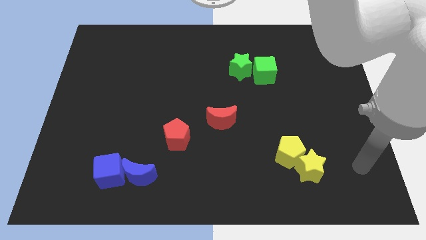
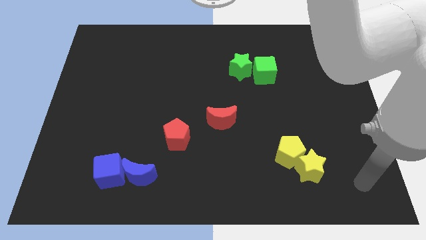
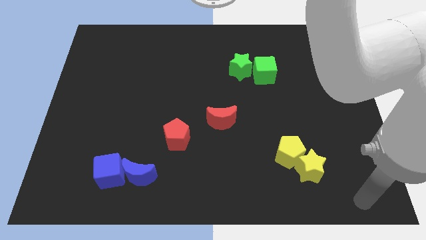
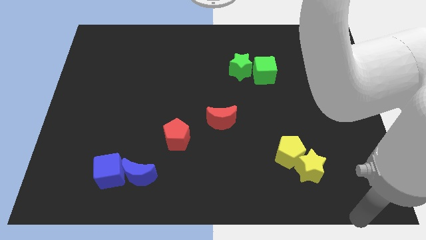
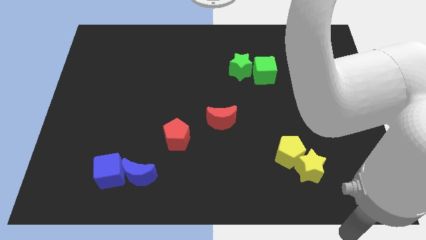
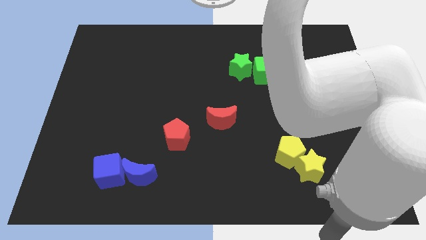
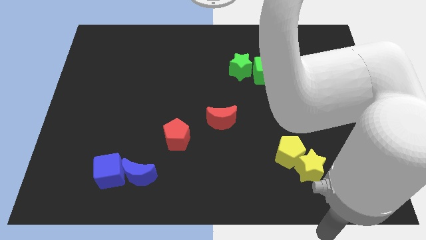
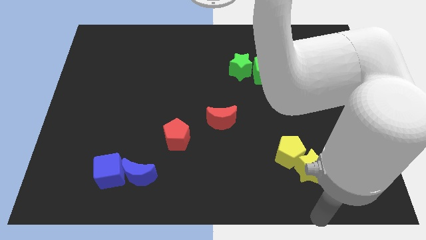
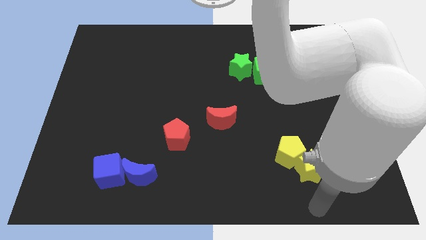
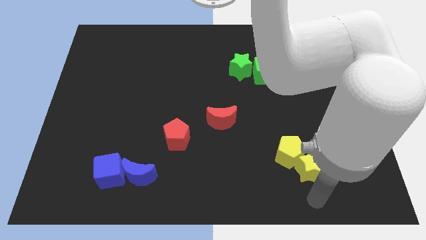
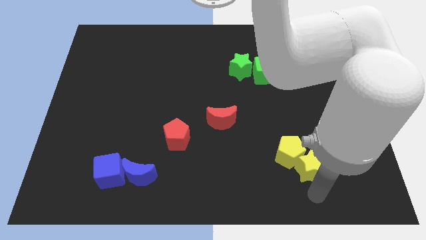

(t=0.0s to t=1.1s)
place arm below yellow star

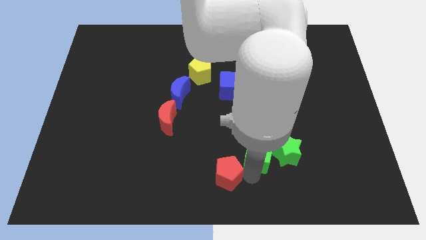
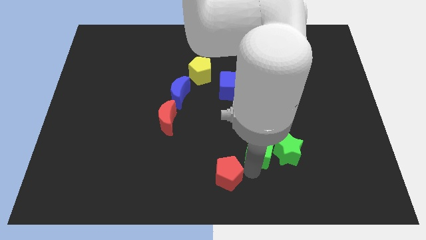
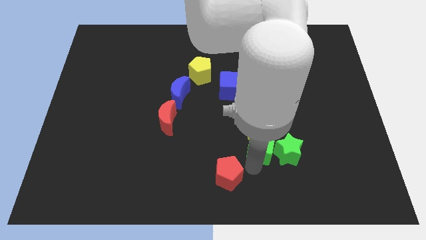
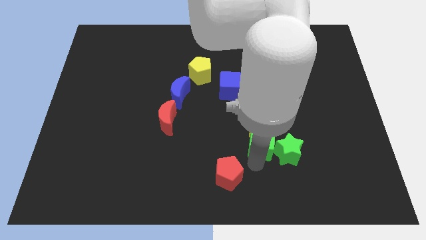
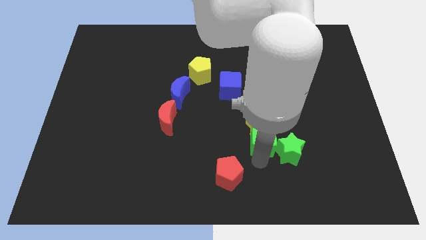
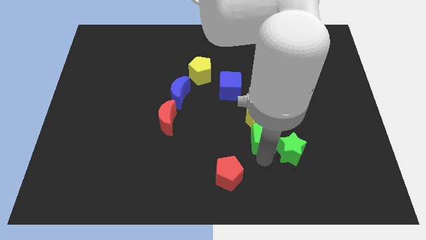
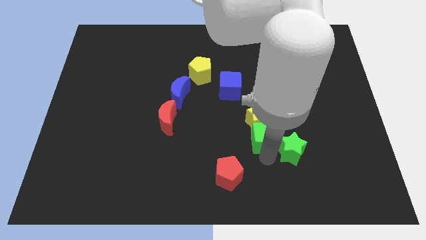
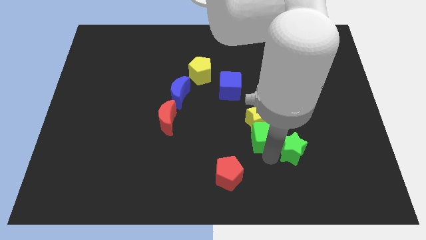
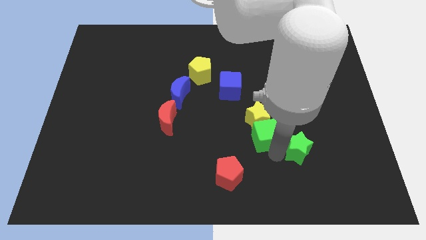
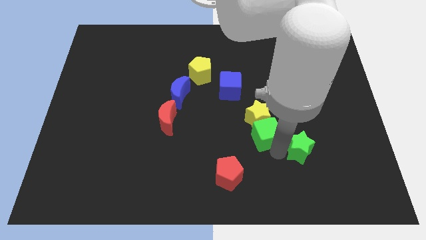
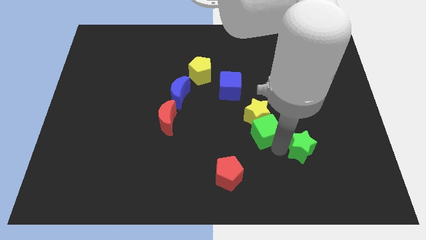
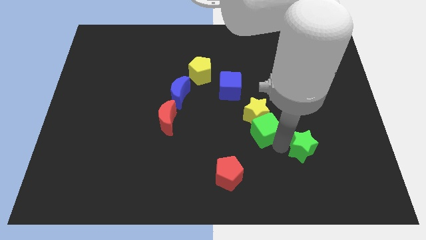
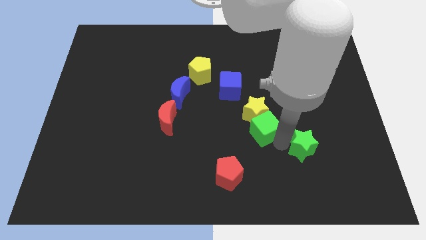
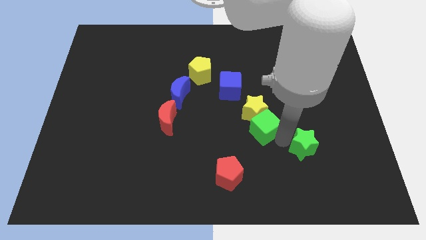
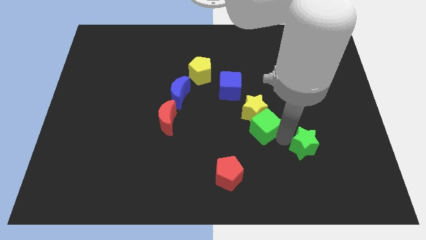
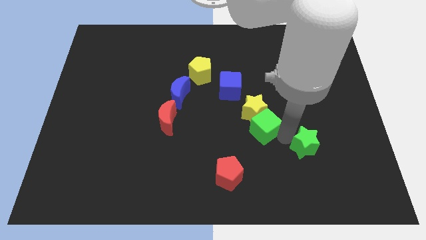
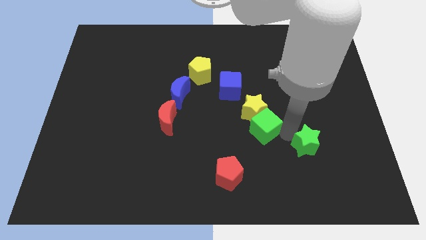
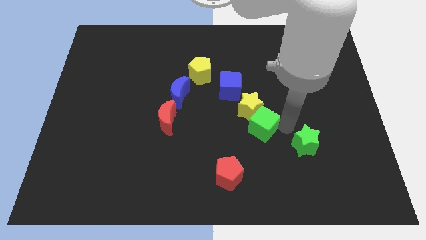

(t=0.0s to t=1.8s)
move green cube apart from green star

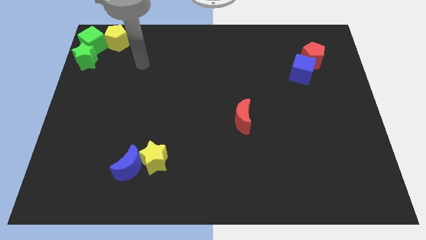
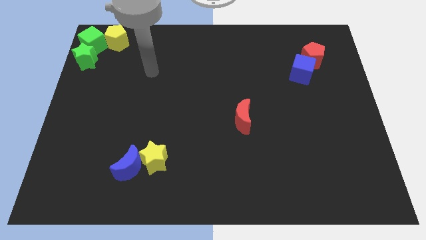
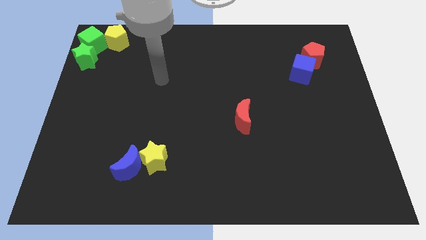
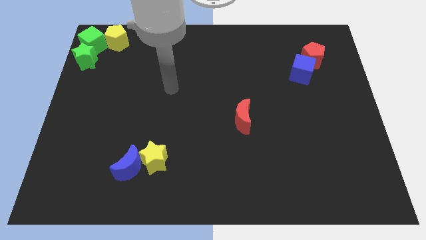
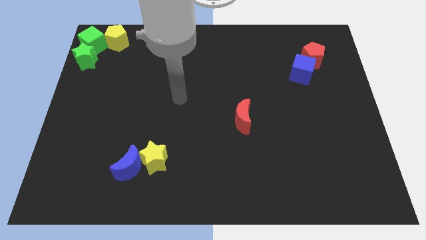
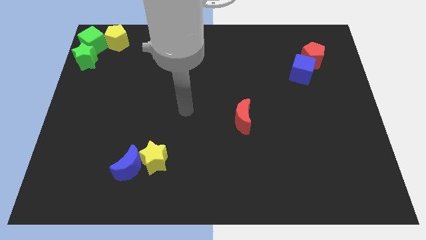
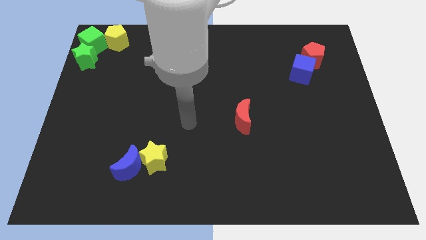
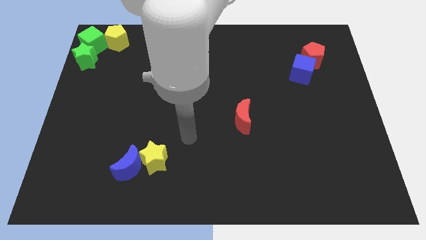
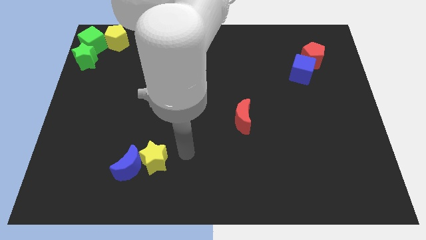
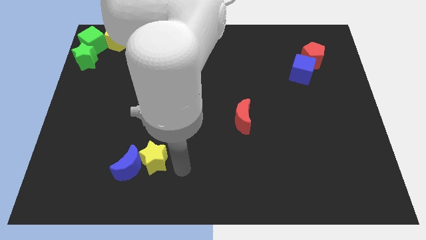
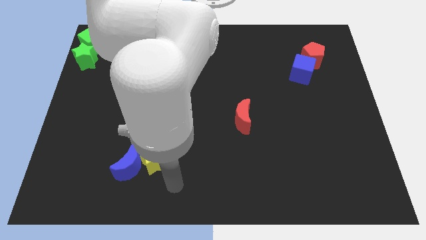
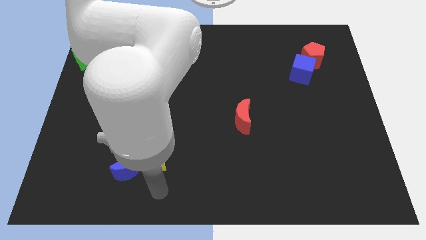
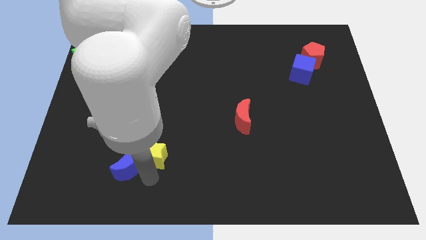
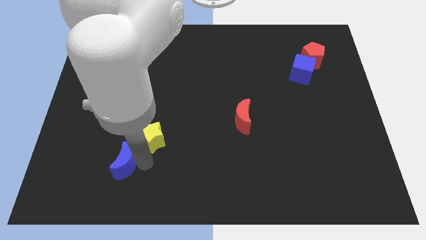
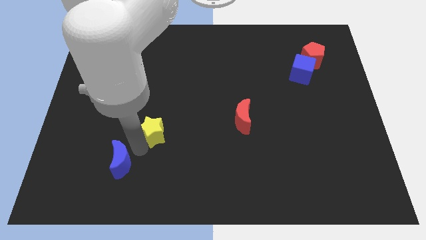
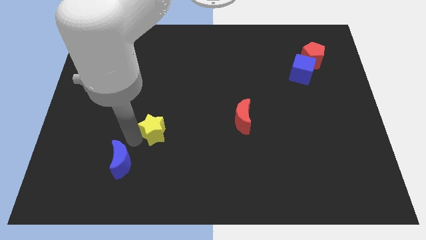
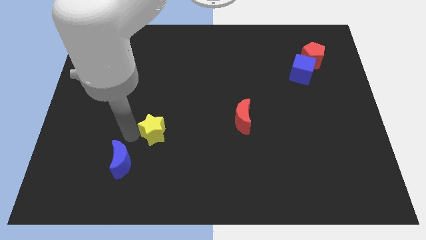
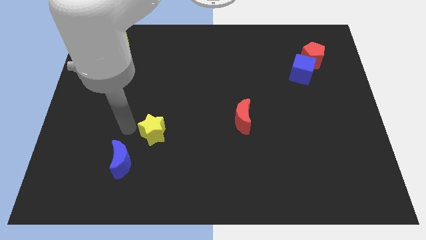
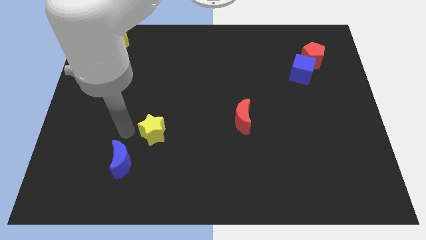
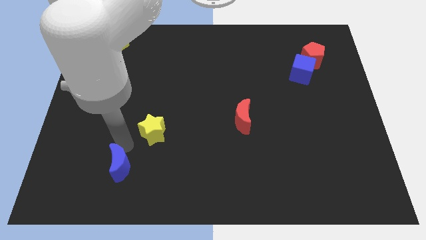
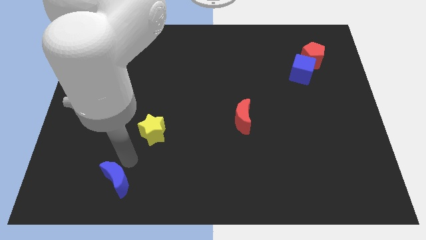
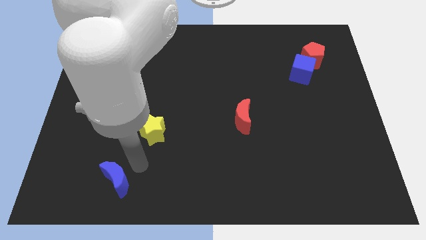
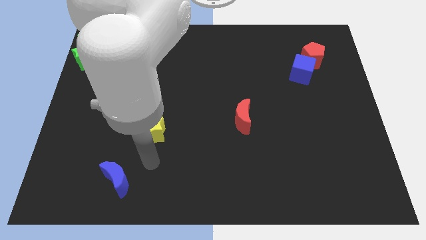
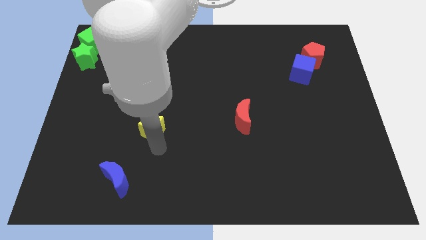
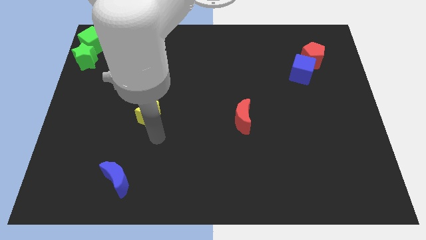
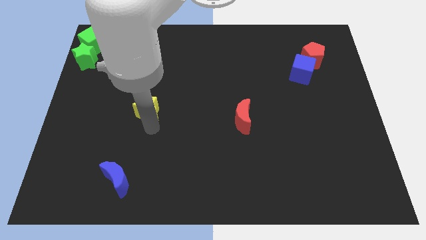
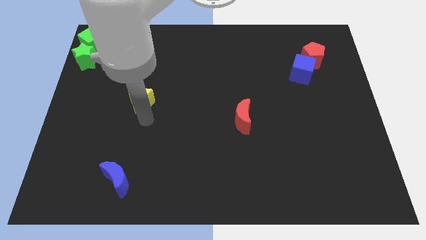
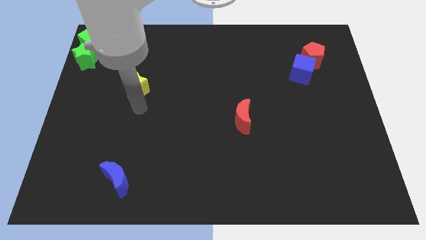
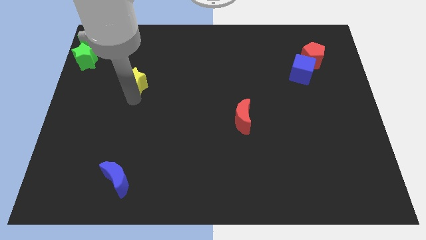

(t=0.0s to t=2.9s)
push the yellow star towards top

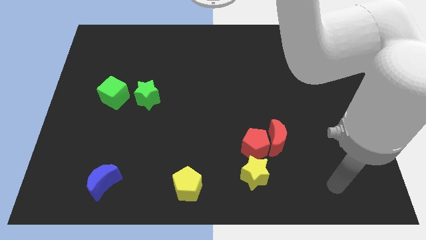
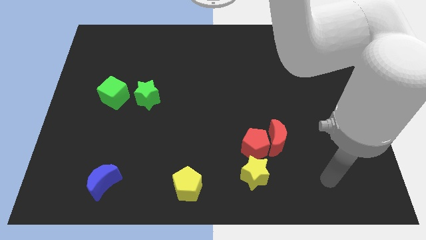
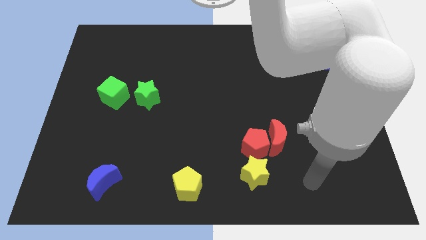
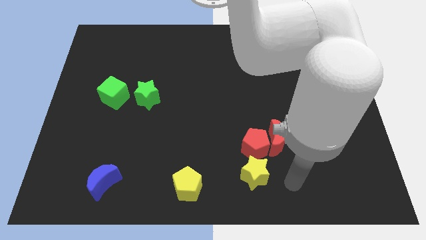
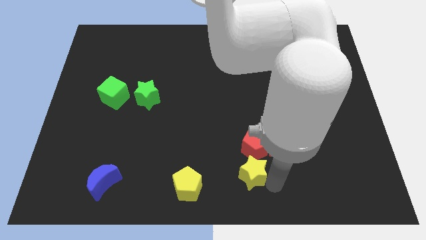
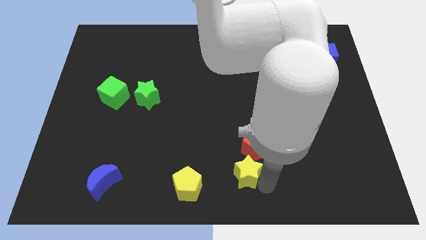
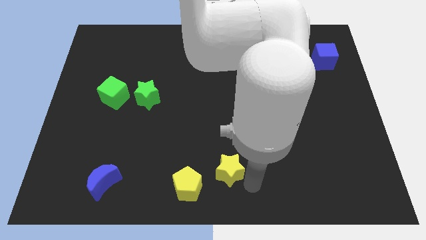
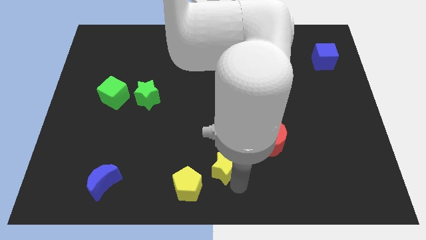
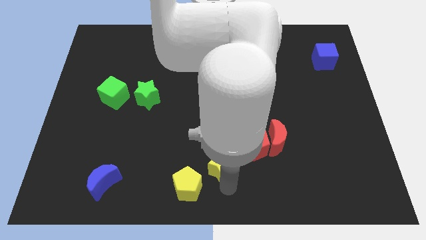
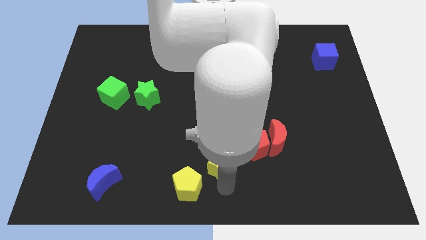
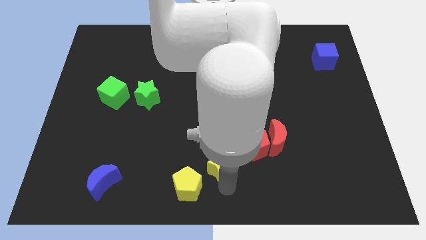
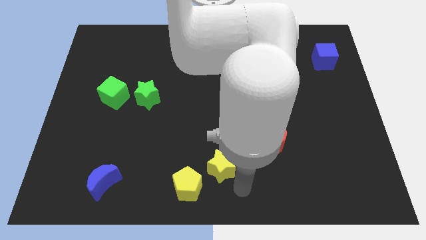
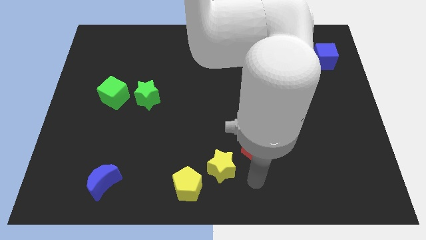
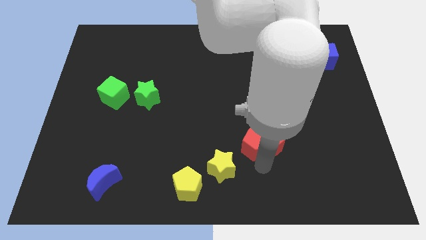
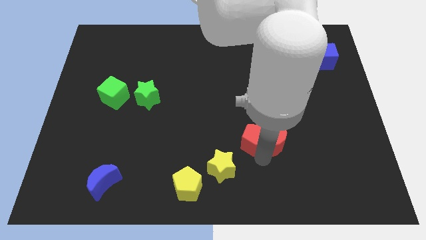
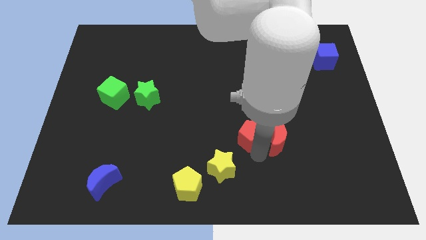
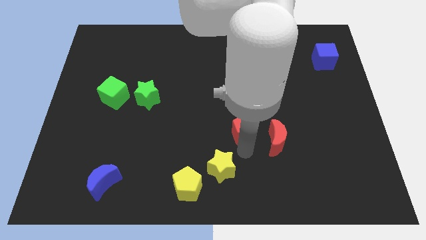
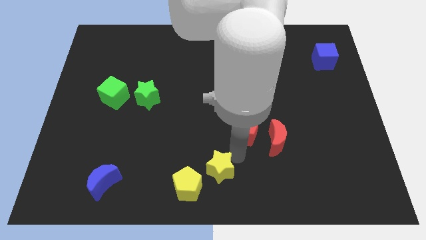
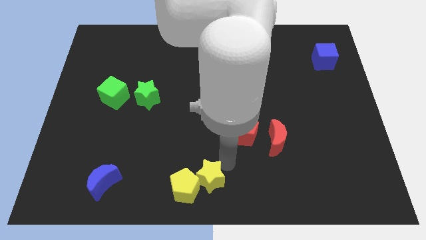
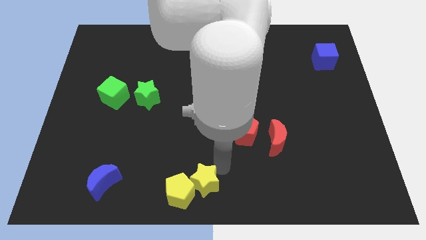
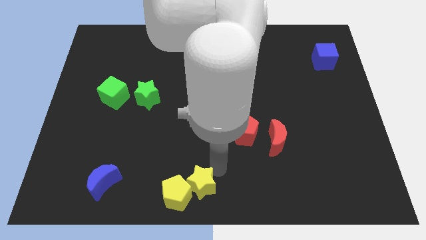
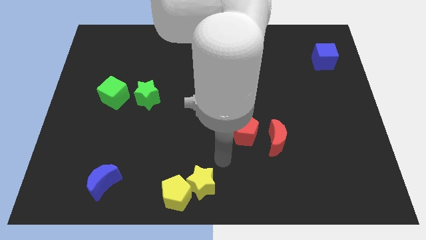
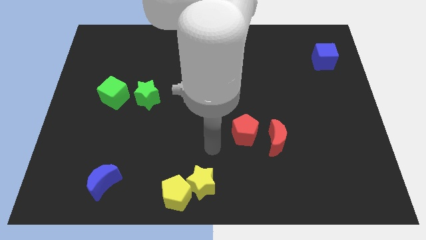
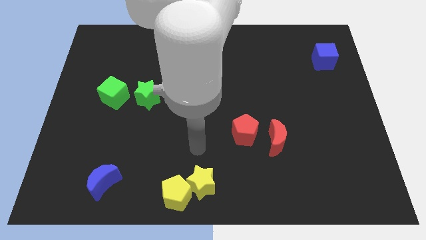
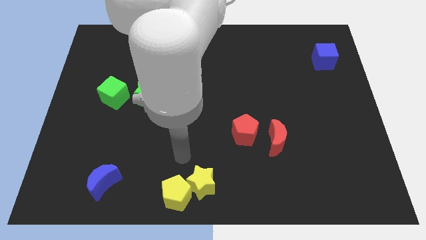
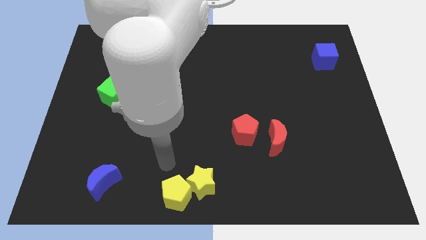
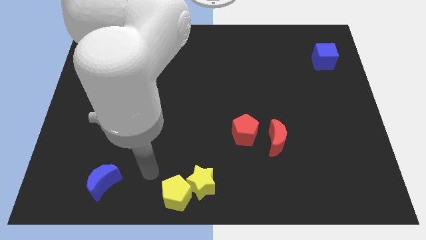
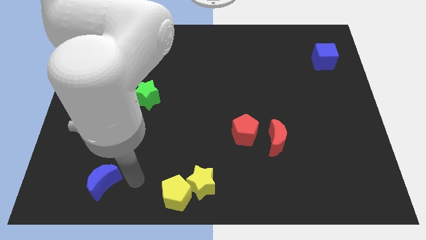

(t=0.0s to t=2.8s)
slide yellow blocks to bottom center of board

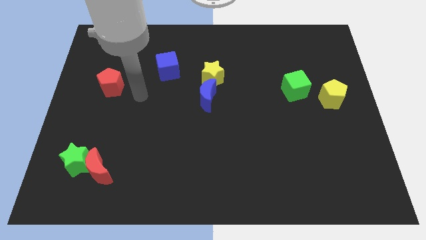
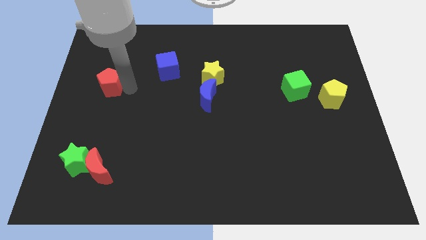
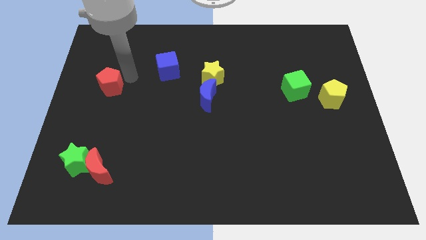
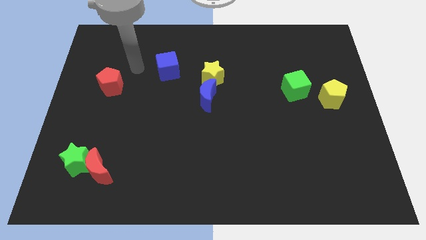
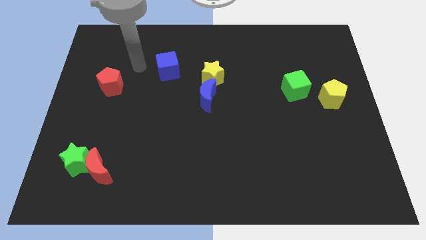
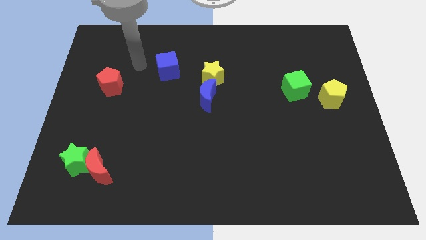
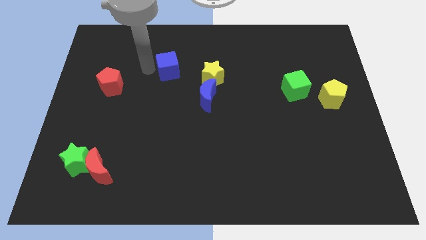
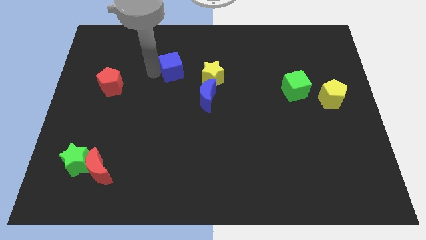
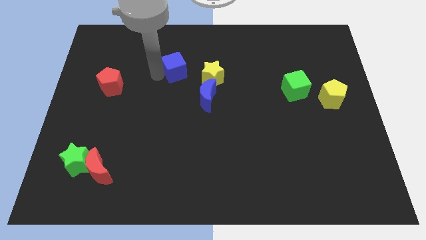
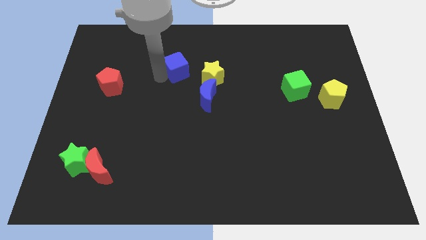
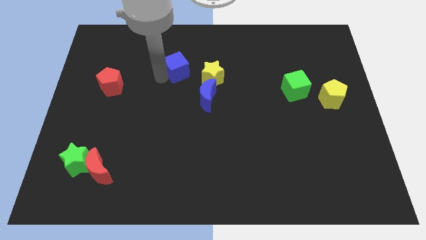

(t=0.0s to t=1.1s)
slightly move the blue cube towards the right side
